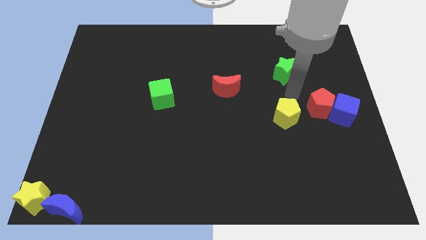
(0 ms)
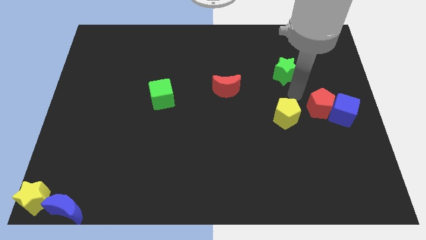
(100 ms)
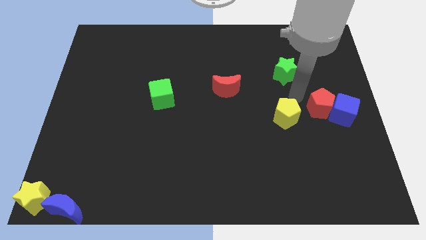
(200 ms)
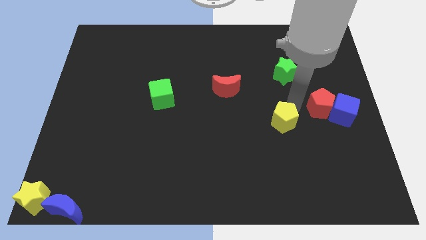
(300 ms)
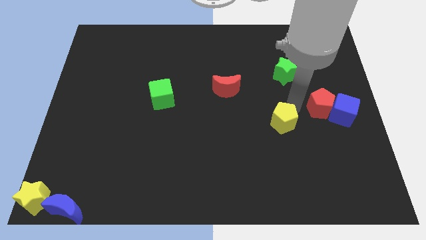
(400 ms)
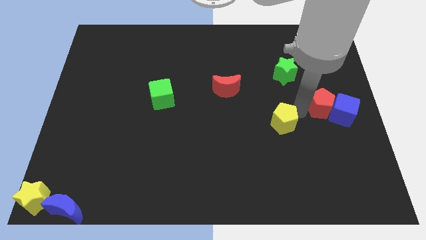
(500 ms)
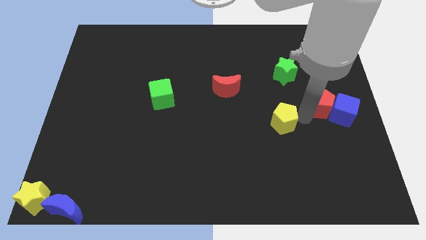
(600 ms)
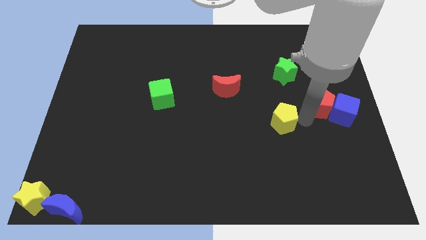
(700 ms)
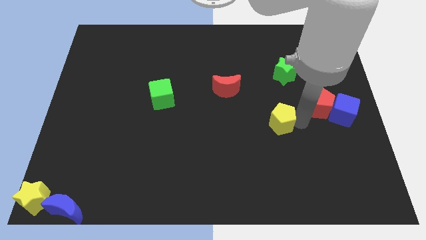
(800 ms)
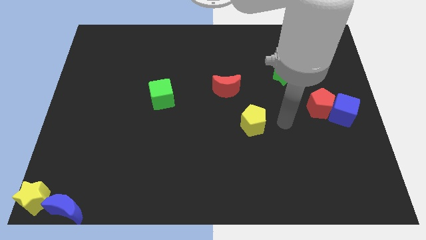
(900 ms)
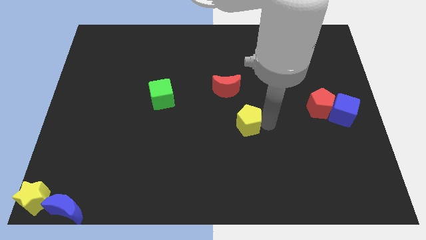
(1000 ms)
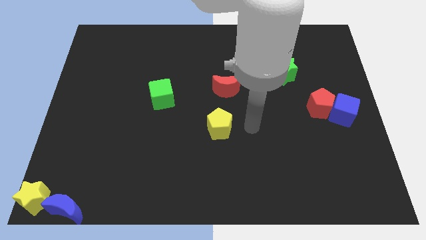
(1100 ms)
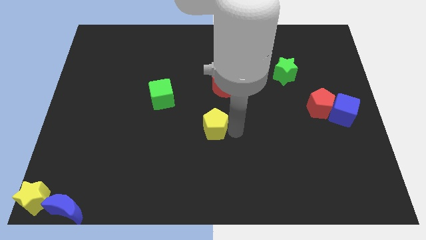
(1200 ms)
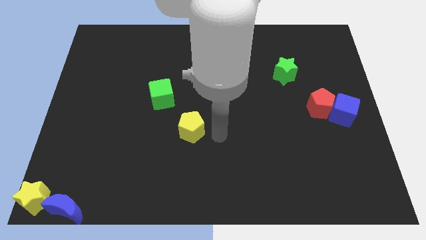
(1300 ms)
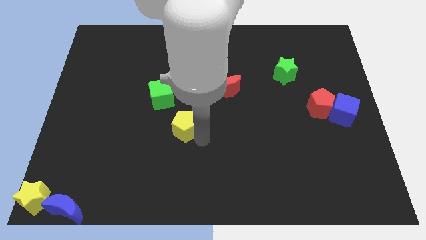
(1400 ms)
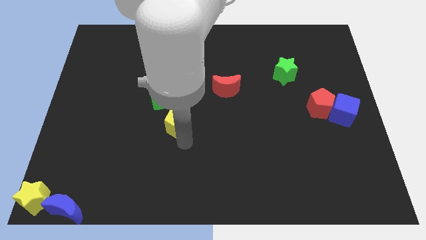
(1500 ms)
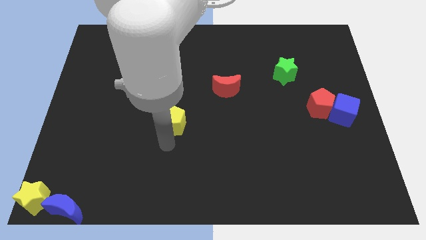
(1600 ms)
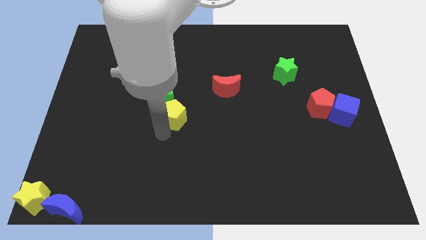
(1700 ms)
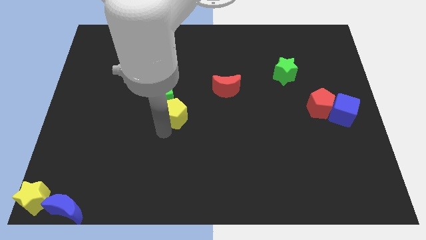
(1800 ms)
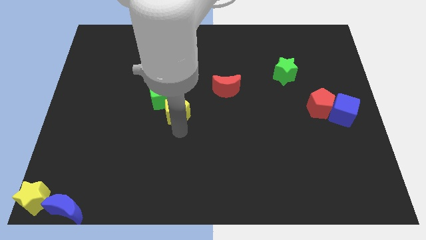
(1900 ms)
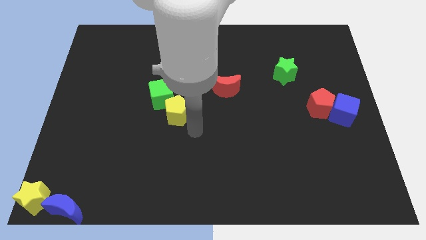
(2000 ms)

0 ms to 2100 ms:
slide the yellow pentagon to the bottom of green cube

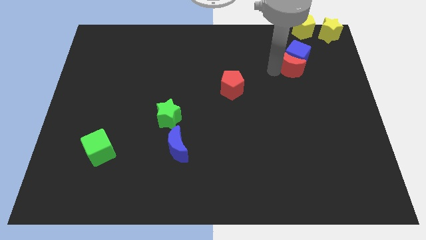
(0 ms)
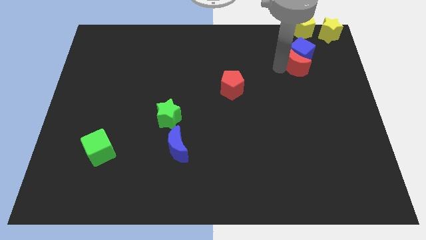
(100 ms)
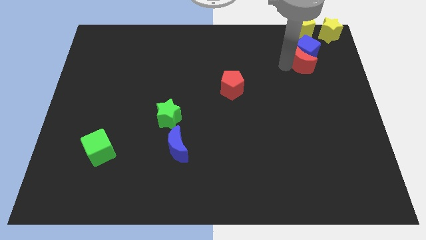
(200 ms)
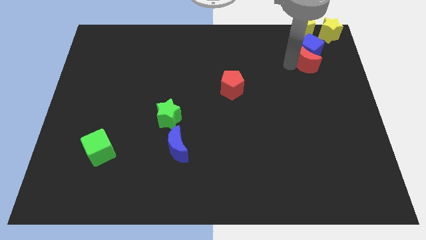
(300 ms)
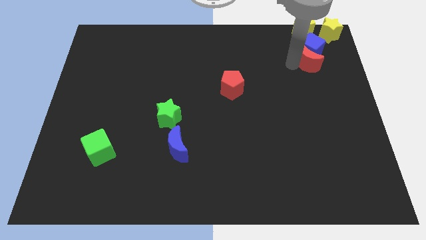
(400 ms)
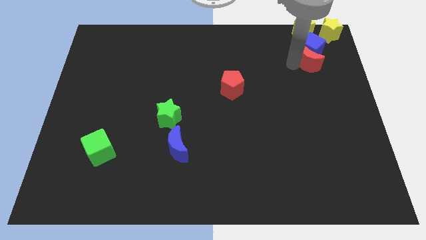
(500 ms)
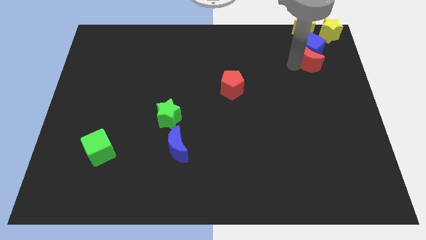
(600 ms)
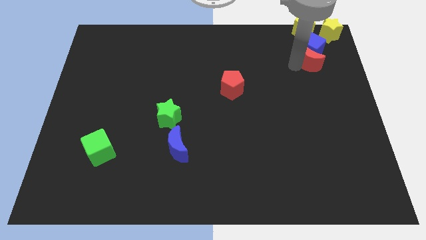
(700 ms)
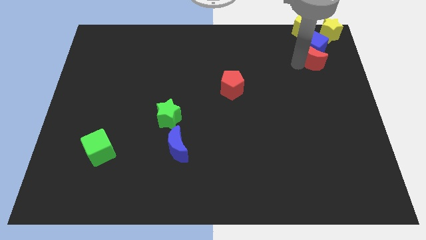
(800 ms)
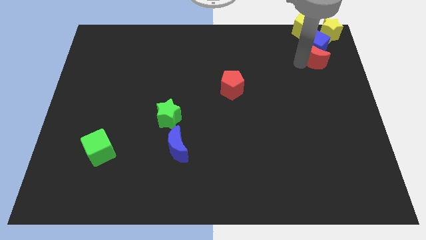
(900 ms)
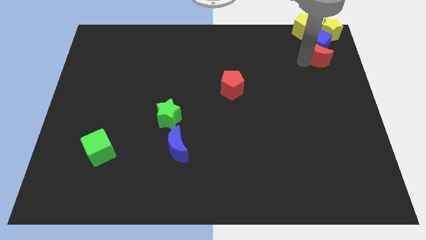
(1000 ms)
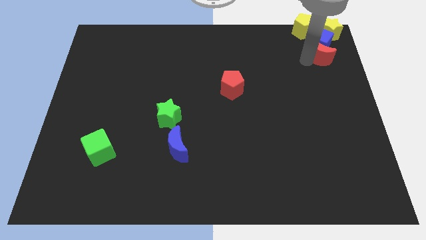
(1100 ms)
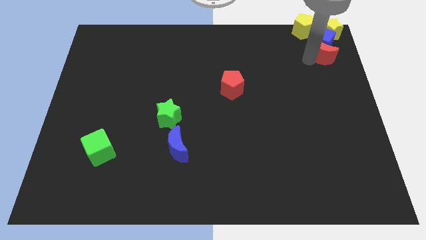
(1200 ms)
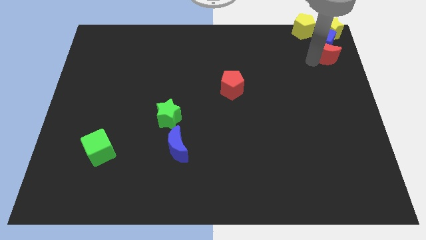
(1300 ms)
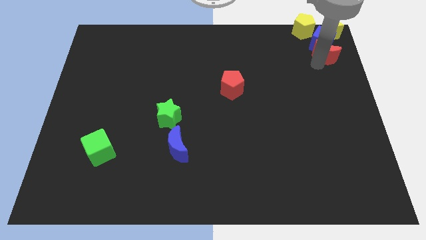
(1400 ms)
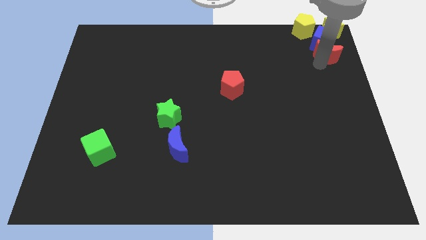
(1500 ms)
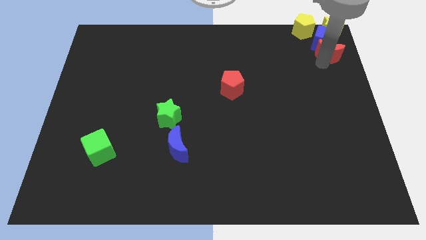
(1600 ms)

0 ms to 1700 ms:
push the red moon and blue cube towards the yellow blocks

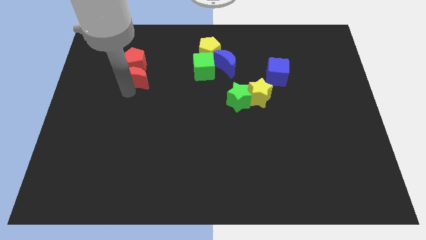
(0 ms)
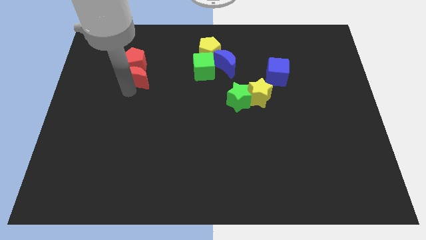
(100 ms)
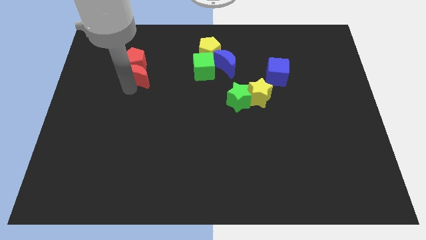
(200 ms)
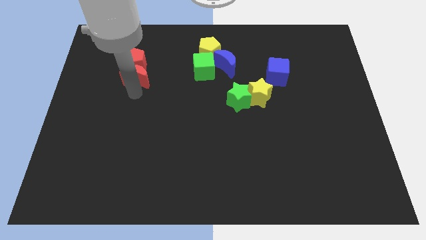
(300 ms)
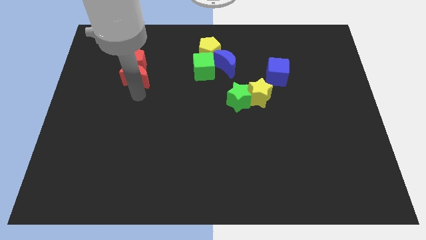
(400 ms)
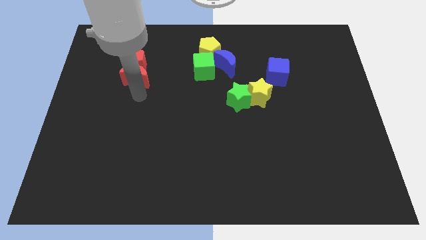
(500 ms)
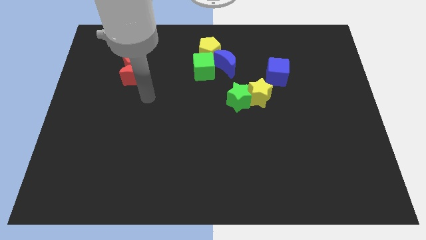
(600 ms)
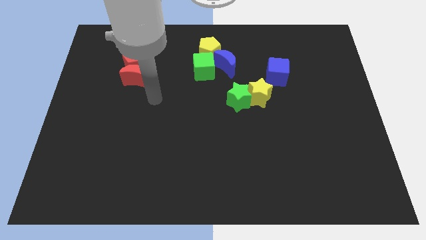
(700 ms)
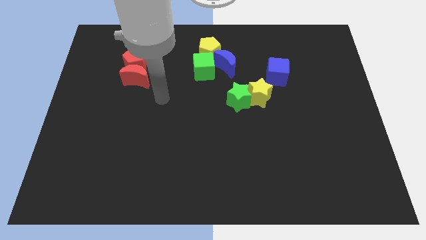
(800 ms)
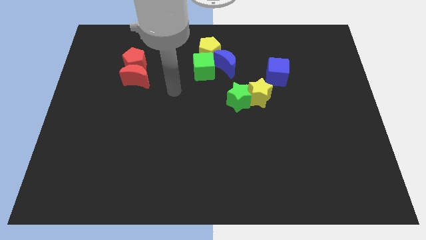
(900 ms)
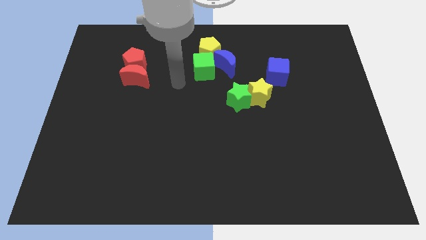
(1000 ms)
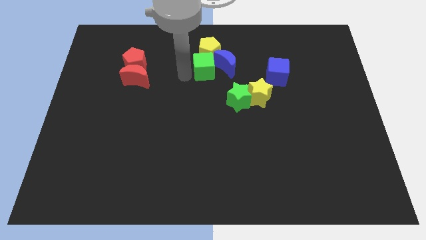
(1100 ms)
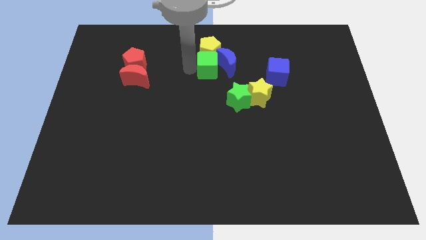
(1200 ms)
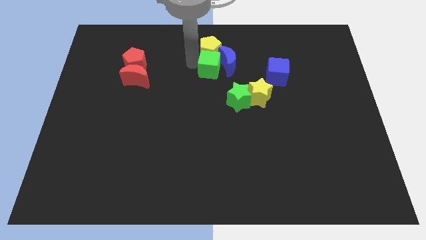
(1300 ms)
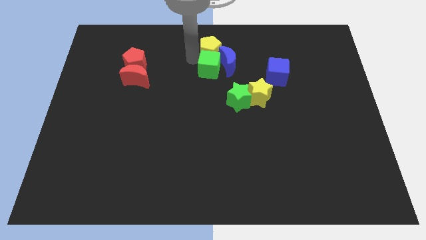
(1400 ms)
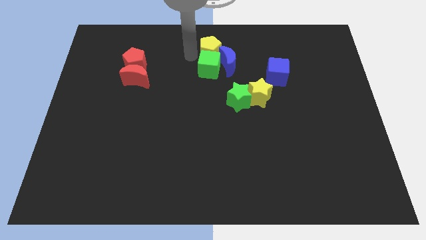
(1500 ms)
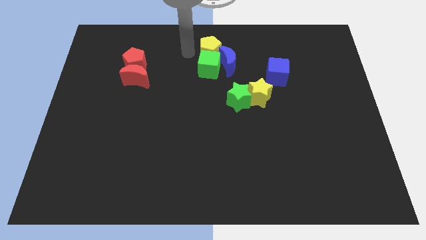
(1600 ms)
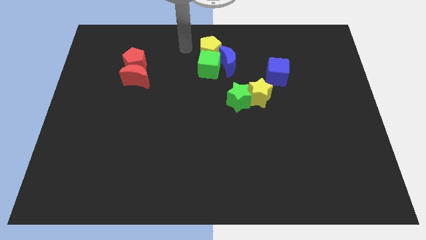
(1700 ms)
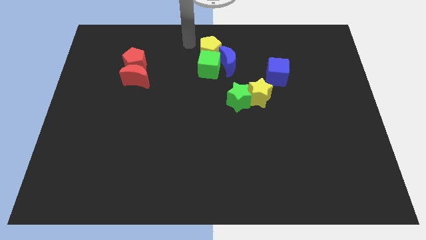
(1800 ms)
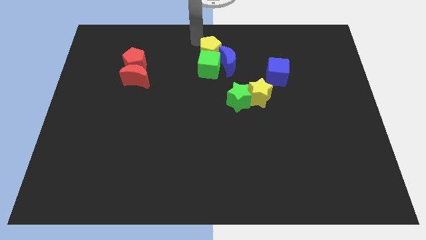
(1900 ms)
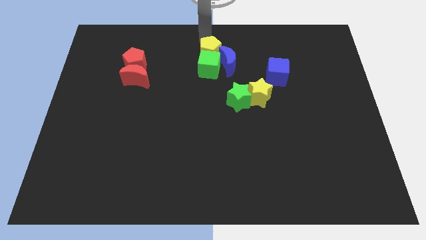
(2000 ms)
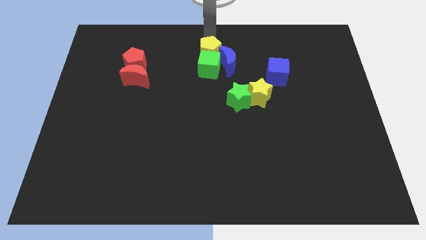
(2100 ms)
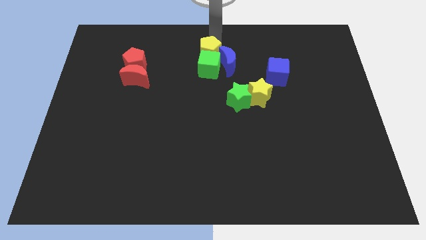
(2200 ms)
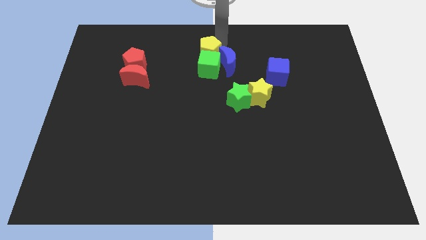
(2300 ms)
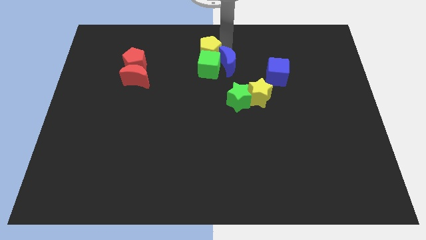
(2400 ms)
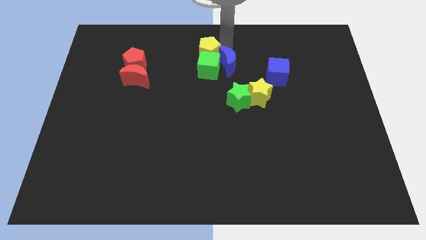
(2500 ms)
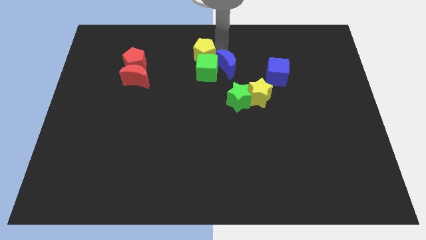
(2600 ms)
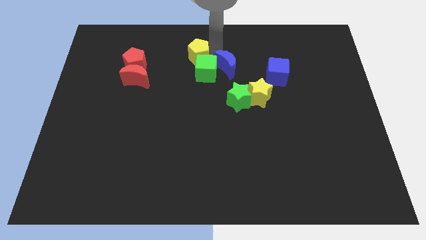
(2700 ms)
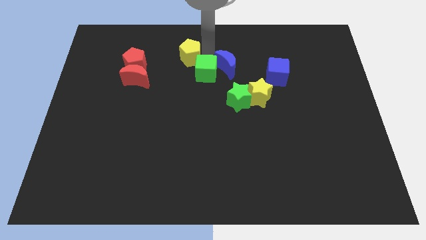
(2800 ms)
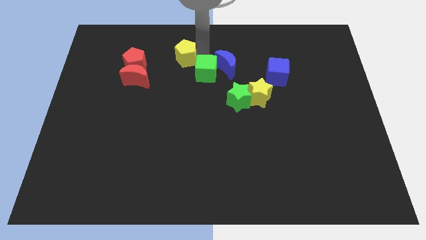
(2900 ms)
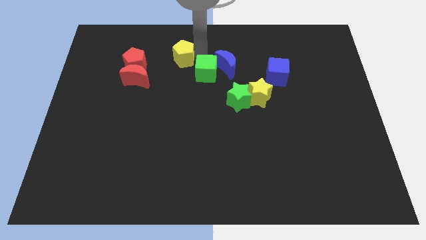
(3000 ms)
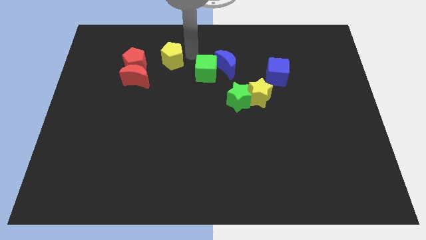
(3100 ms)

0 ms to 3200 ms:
separate yellow pentagon from green cube

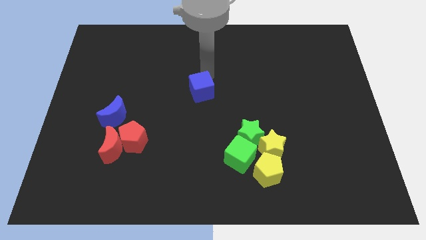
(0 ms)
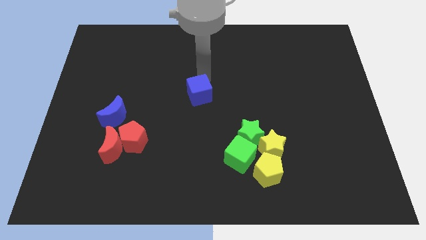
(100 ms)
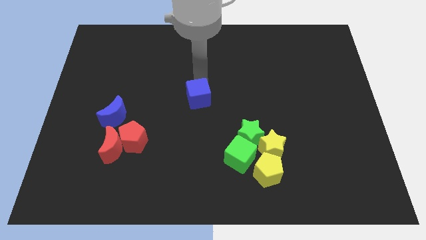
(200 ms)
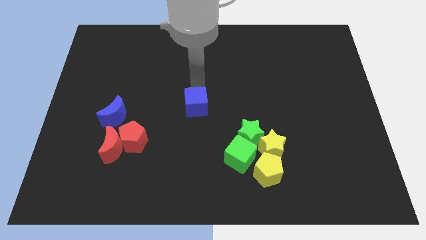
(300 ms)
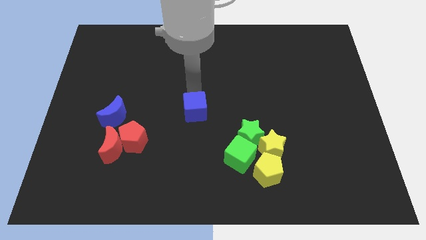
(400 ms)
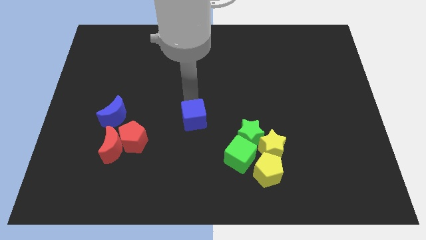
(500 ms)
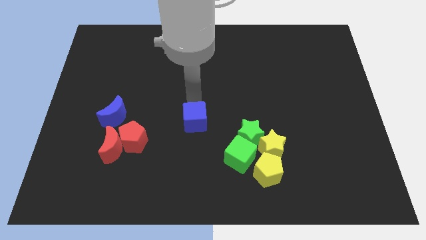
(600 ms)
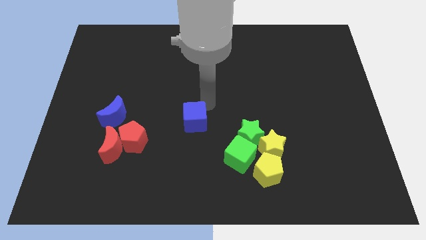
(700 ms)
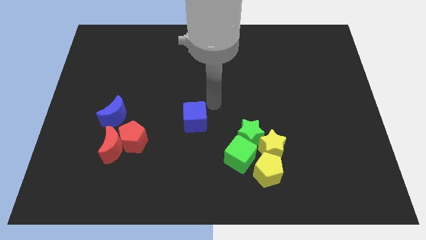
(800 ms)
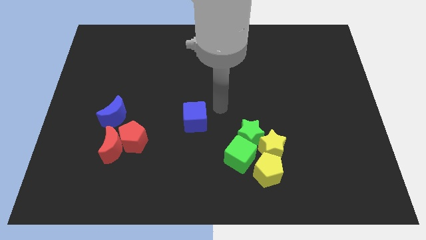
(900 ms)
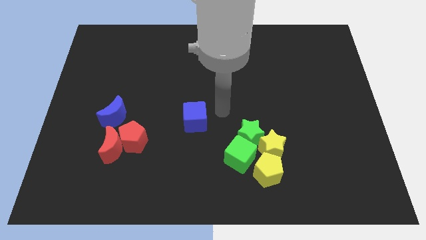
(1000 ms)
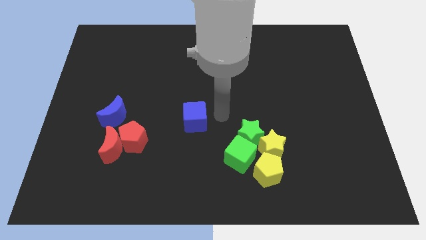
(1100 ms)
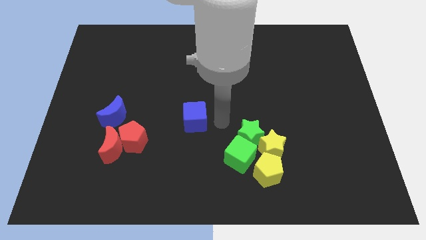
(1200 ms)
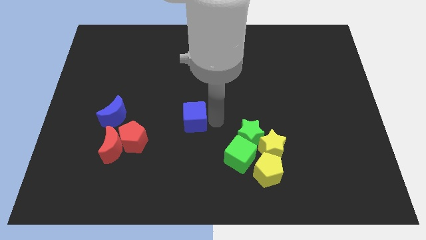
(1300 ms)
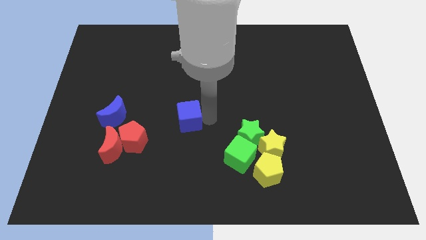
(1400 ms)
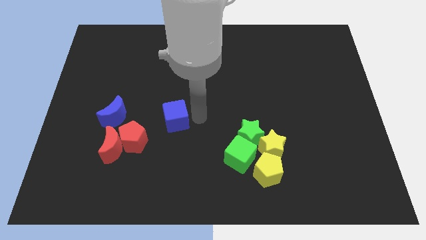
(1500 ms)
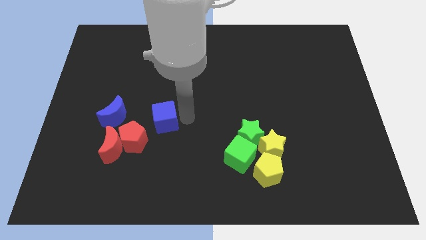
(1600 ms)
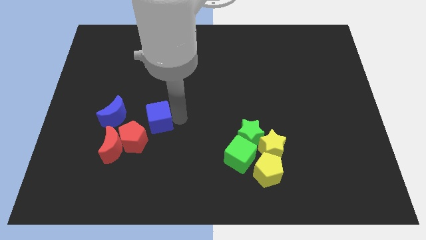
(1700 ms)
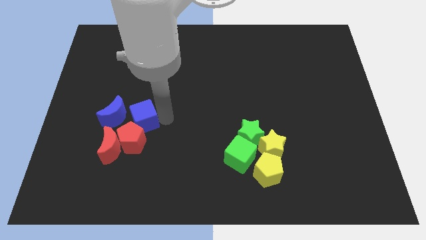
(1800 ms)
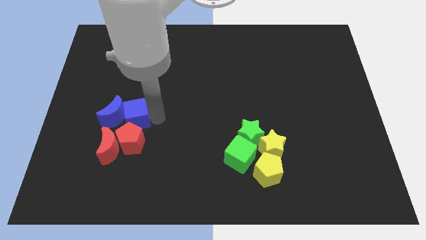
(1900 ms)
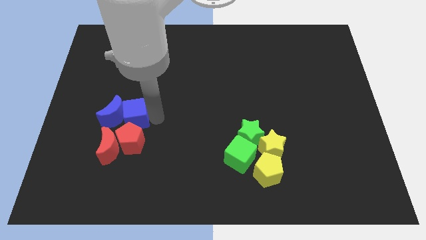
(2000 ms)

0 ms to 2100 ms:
push blue cube to the right of blue moon
